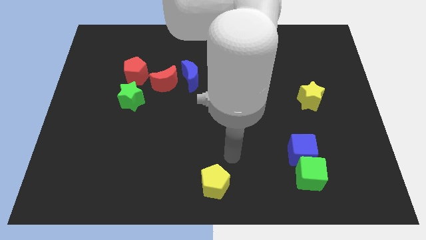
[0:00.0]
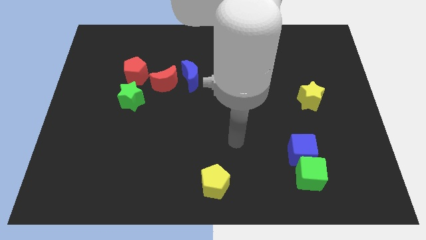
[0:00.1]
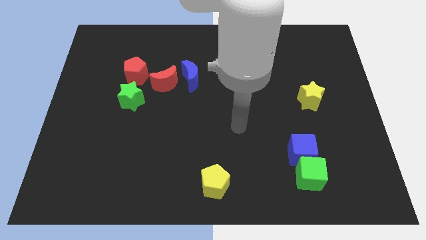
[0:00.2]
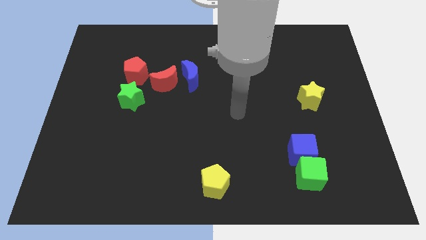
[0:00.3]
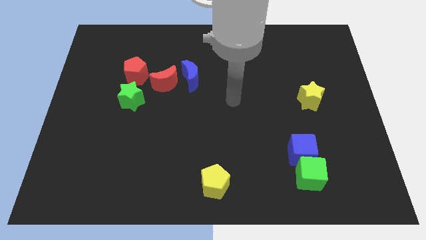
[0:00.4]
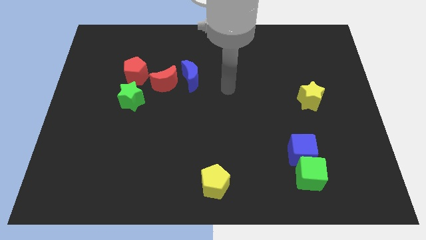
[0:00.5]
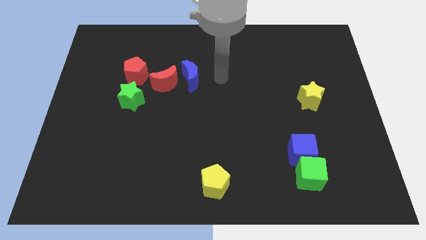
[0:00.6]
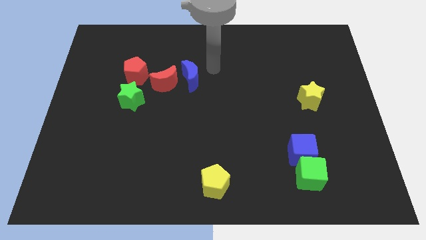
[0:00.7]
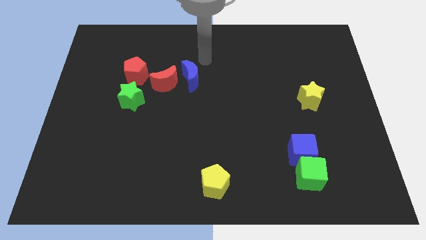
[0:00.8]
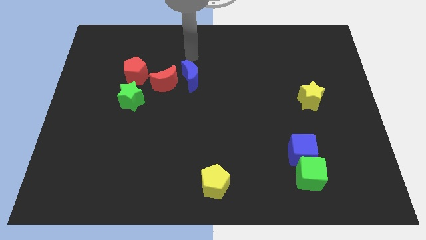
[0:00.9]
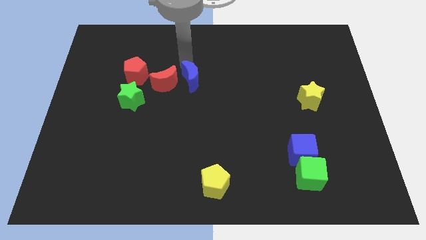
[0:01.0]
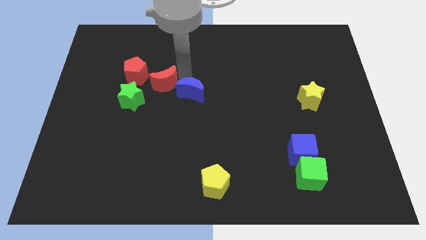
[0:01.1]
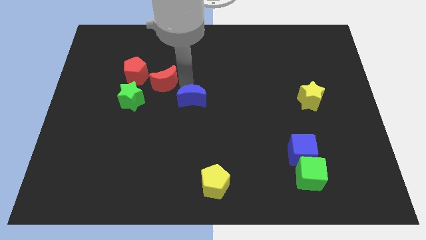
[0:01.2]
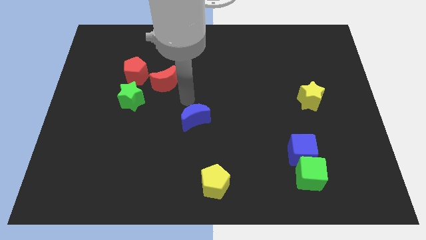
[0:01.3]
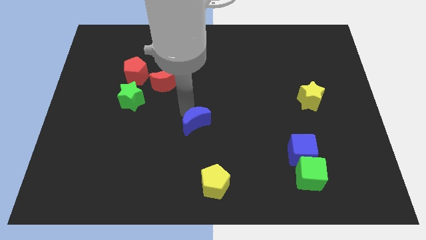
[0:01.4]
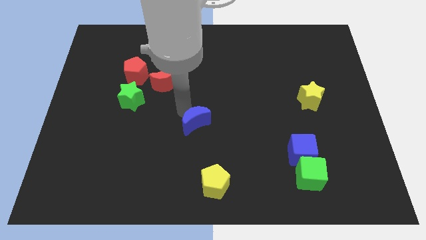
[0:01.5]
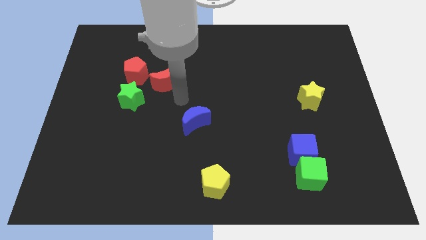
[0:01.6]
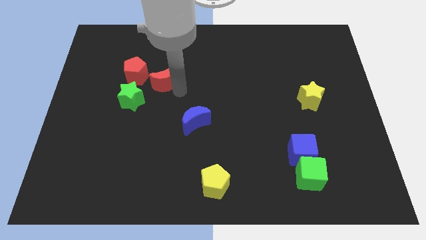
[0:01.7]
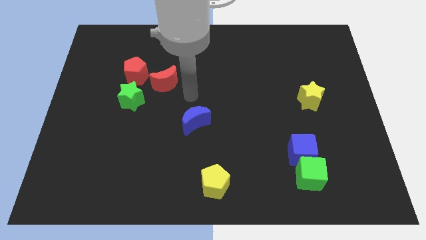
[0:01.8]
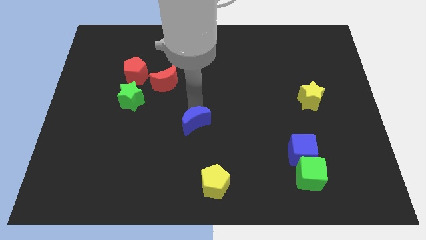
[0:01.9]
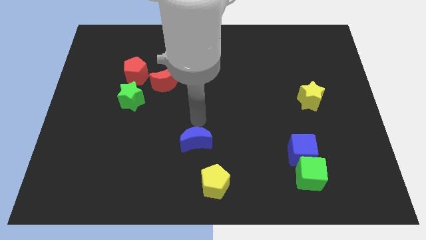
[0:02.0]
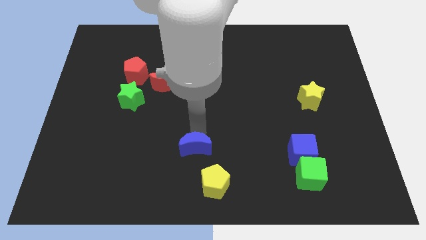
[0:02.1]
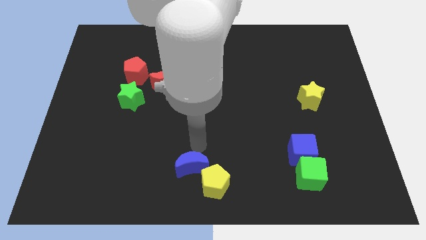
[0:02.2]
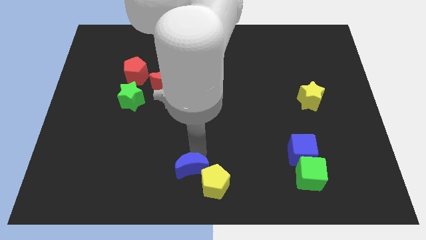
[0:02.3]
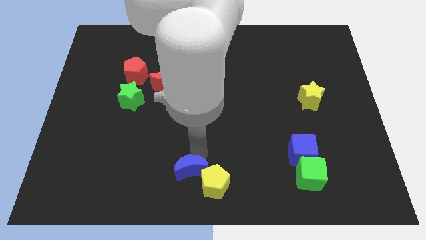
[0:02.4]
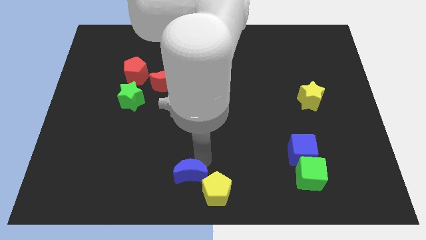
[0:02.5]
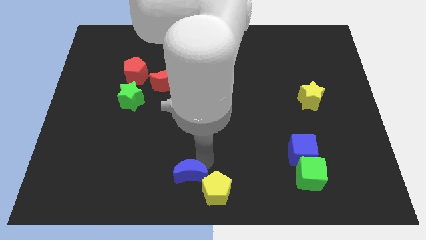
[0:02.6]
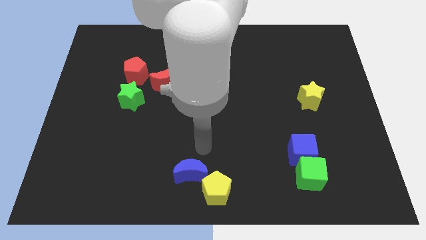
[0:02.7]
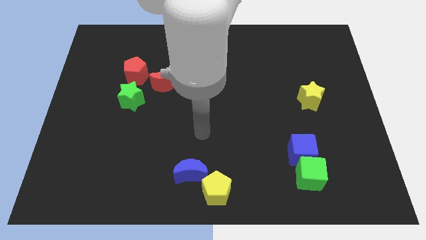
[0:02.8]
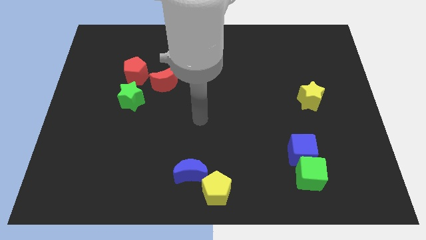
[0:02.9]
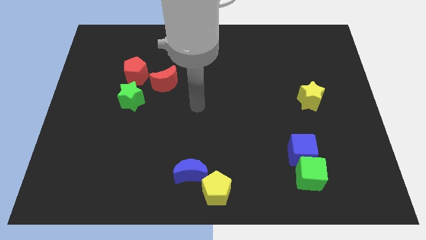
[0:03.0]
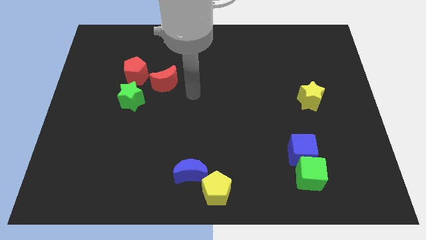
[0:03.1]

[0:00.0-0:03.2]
push the blue crescent to the top left of the yellow pentagon

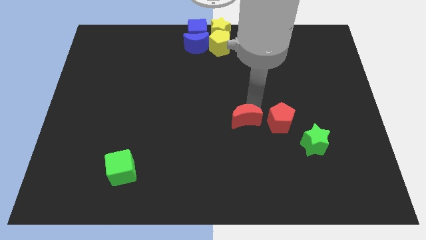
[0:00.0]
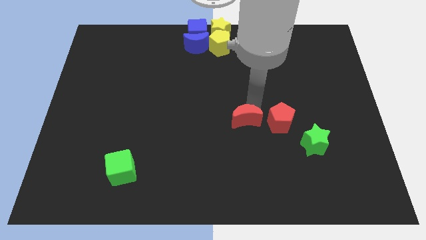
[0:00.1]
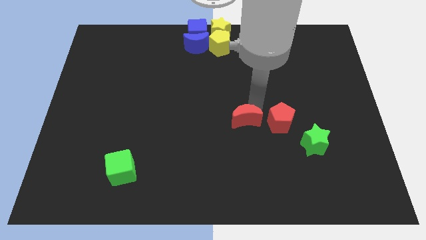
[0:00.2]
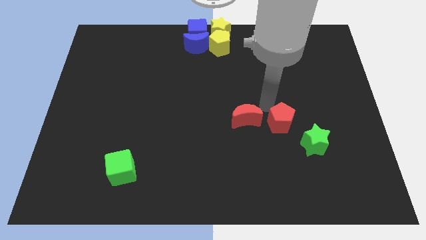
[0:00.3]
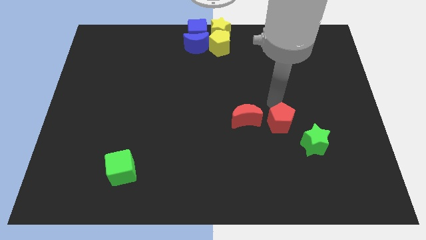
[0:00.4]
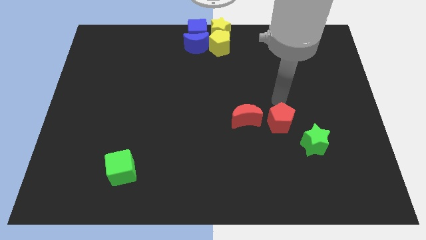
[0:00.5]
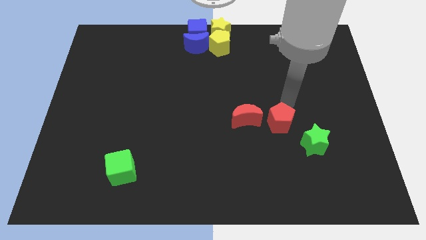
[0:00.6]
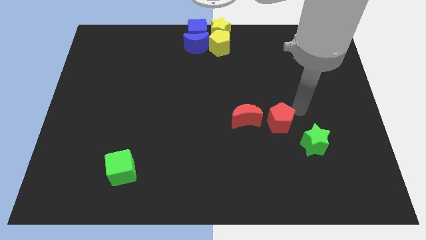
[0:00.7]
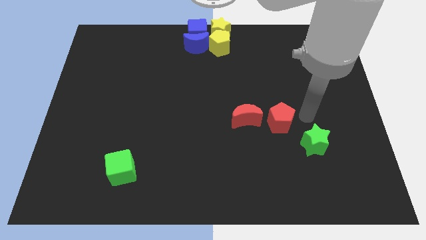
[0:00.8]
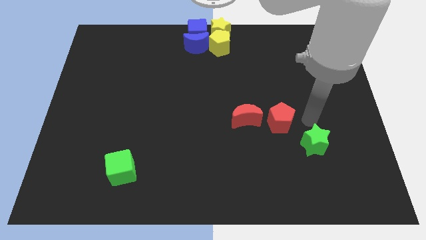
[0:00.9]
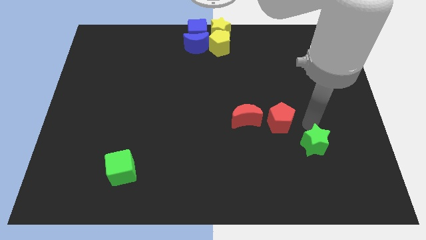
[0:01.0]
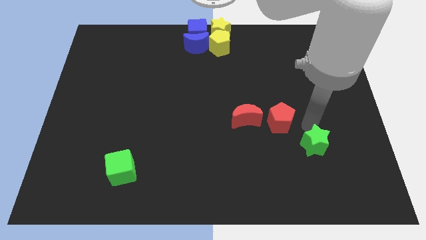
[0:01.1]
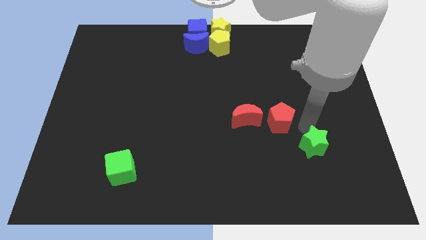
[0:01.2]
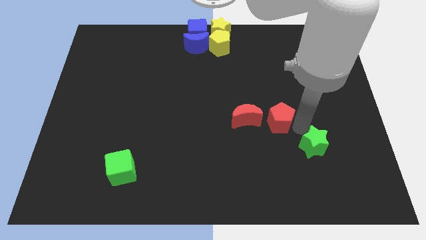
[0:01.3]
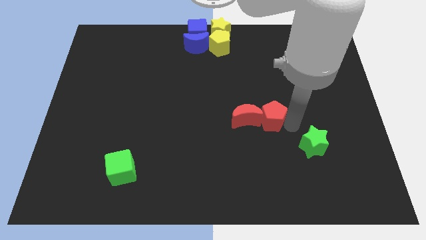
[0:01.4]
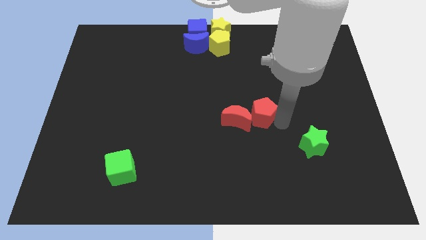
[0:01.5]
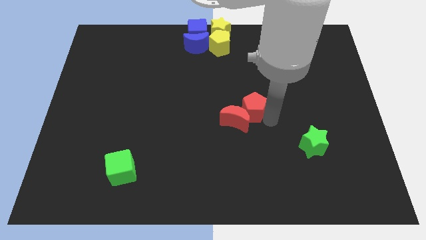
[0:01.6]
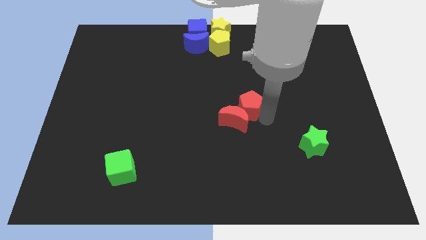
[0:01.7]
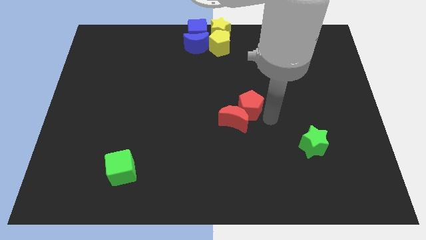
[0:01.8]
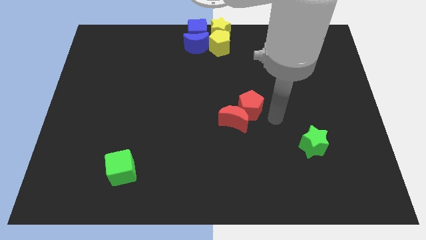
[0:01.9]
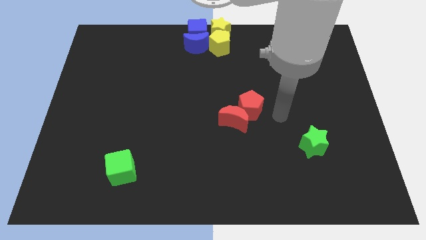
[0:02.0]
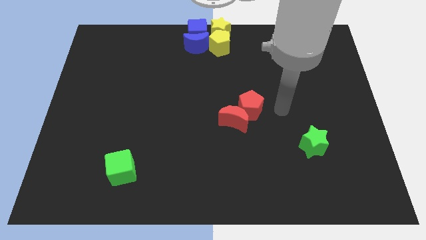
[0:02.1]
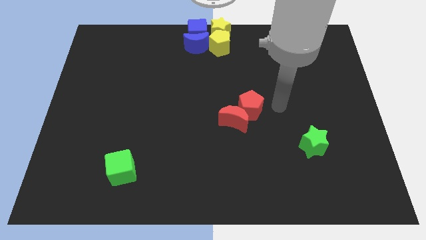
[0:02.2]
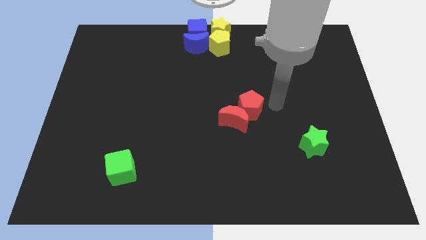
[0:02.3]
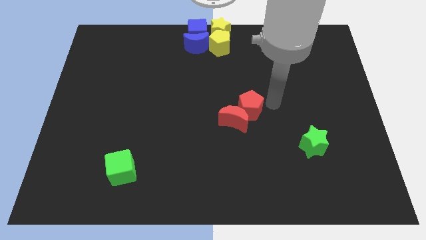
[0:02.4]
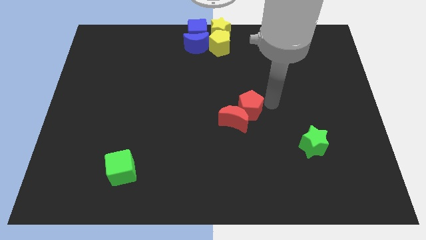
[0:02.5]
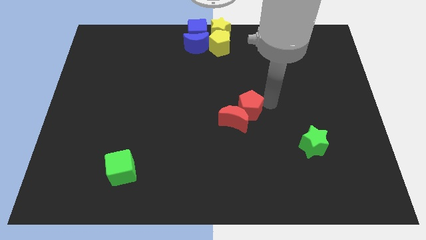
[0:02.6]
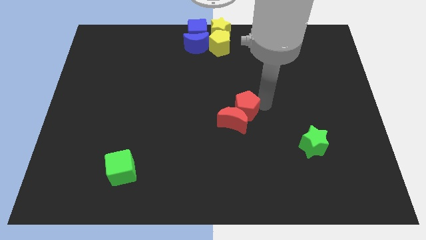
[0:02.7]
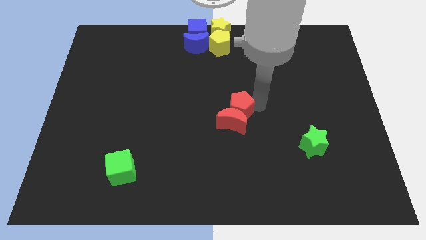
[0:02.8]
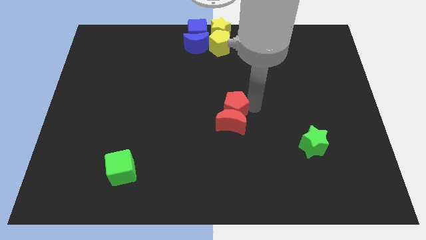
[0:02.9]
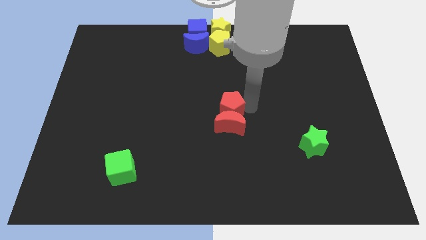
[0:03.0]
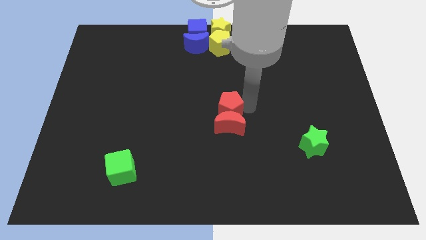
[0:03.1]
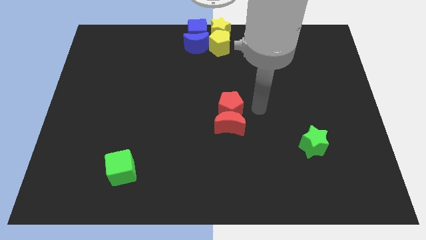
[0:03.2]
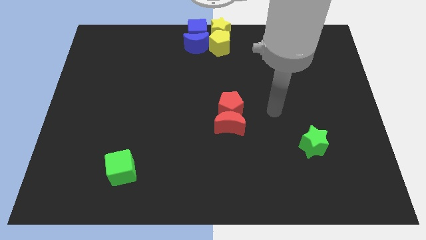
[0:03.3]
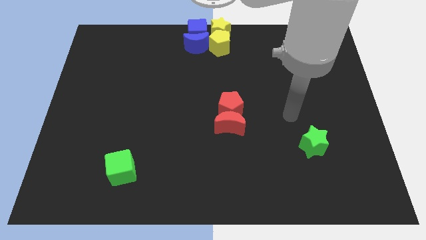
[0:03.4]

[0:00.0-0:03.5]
place the red pentagon at the top of the red crescent

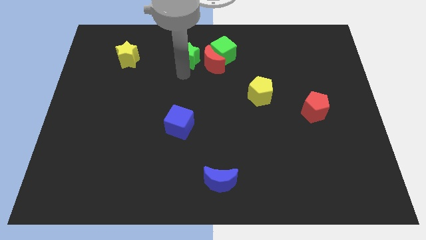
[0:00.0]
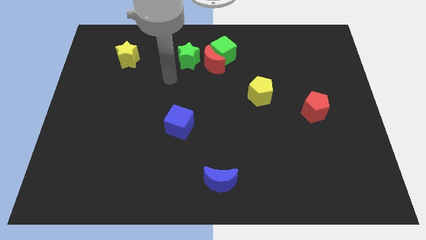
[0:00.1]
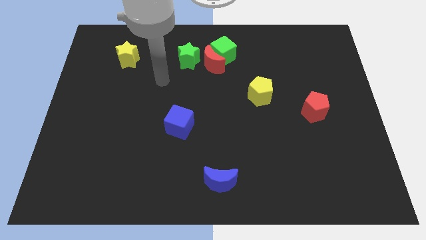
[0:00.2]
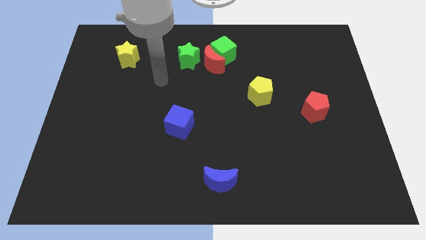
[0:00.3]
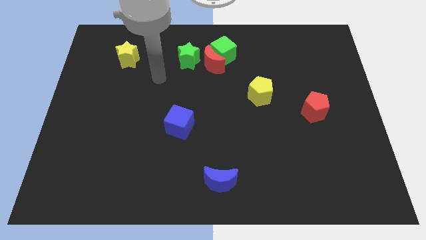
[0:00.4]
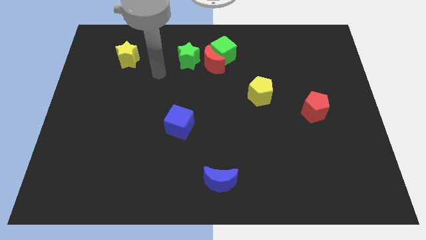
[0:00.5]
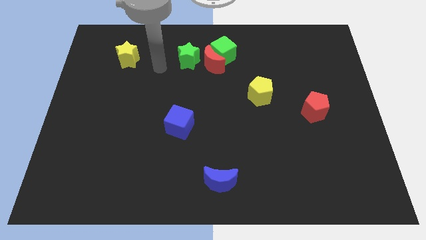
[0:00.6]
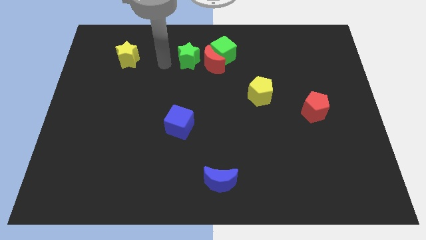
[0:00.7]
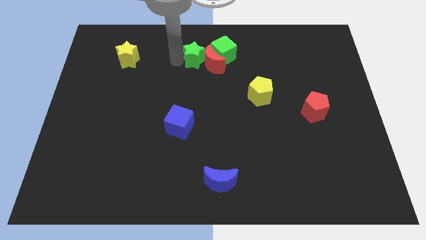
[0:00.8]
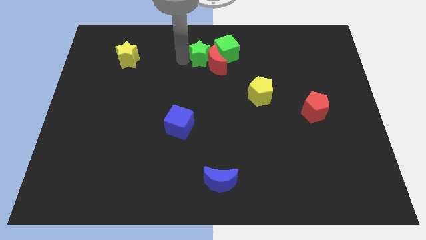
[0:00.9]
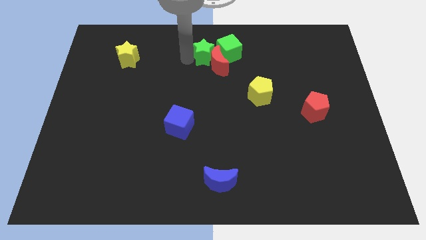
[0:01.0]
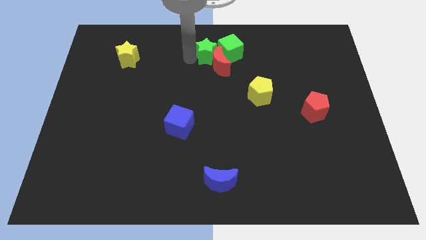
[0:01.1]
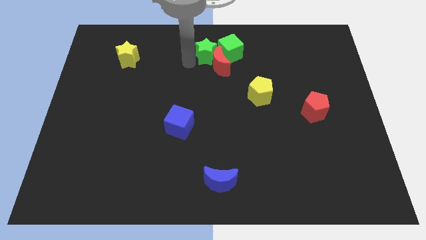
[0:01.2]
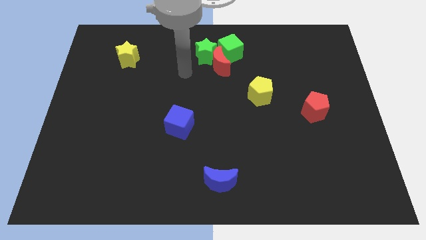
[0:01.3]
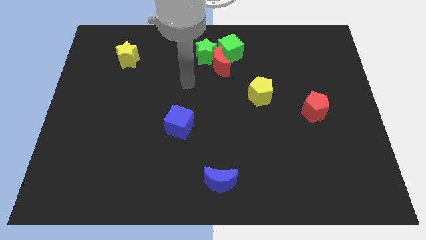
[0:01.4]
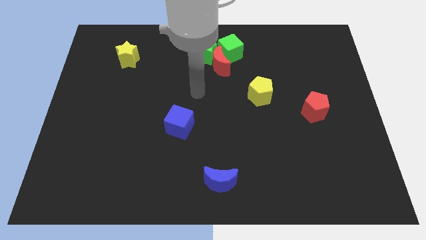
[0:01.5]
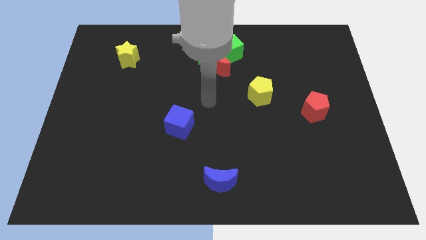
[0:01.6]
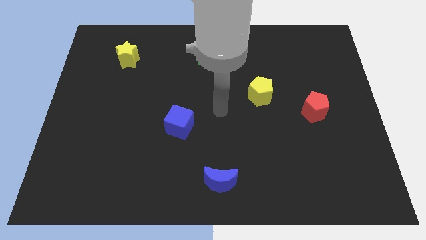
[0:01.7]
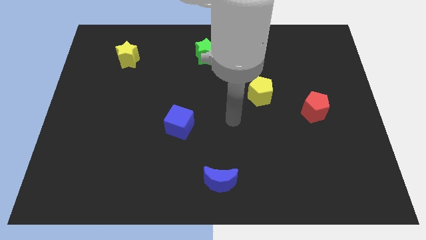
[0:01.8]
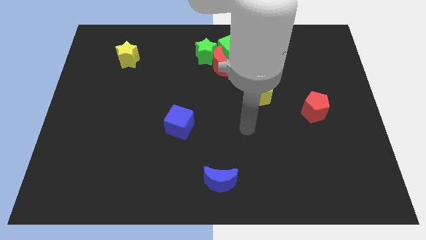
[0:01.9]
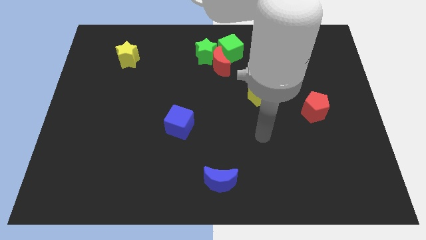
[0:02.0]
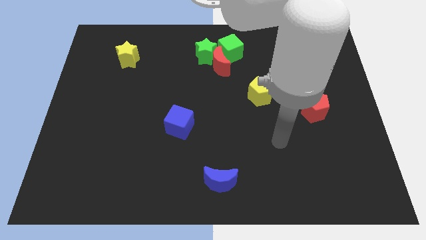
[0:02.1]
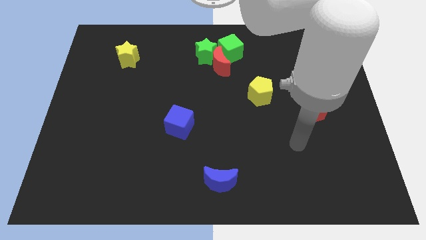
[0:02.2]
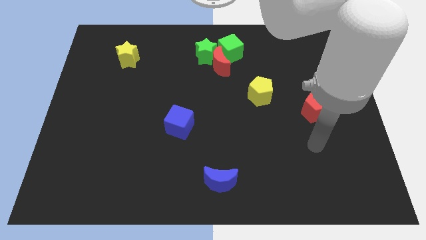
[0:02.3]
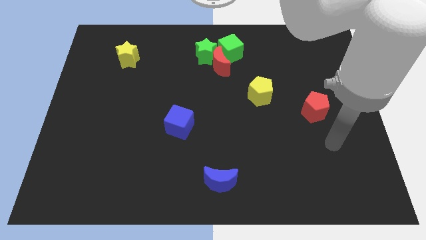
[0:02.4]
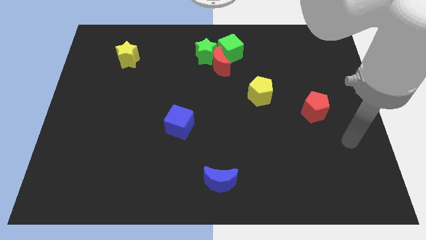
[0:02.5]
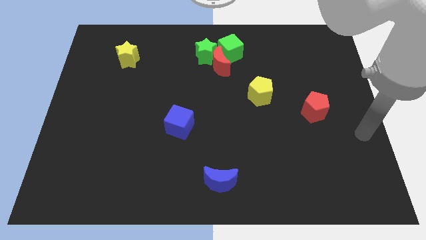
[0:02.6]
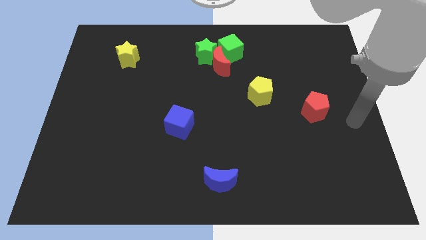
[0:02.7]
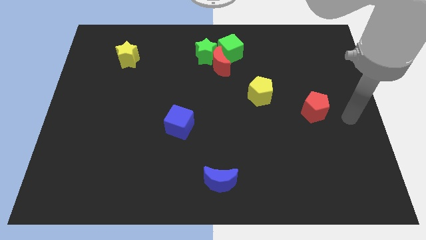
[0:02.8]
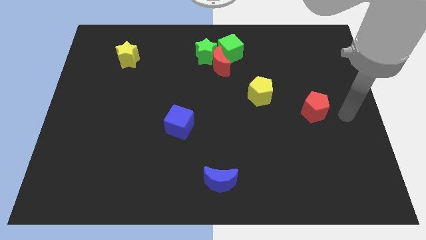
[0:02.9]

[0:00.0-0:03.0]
slightly push the green star into the group of blocks
